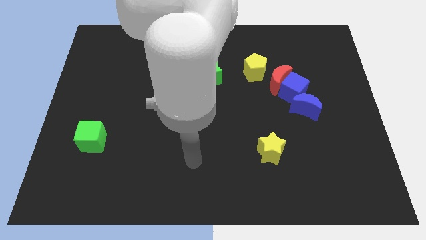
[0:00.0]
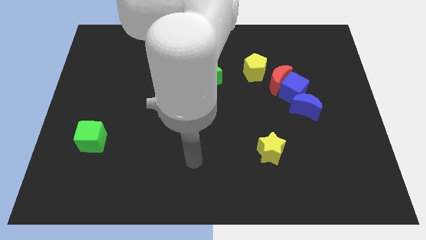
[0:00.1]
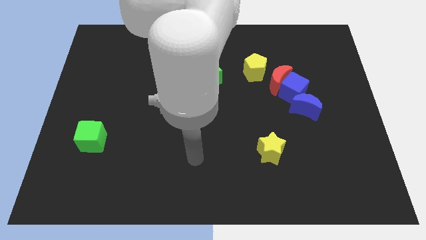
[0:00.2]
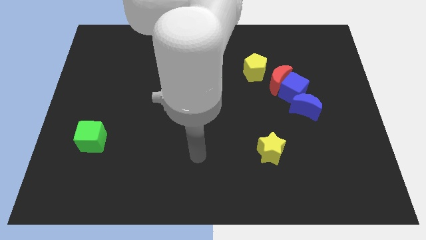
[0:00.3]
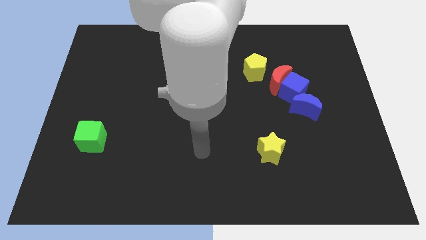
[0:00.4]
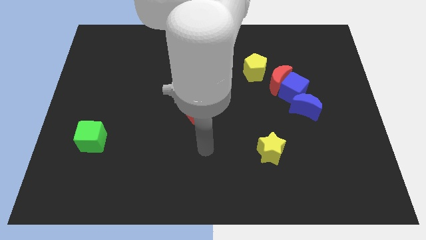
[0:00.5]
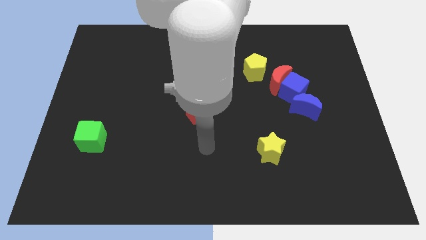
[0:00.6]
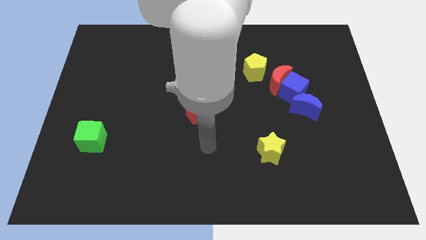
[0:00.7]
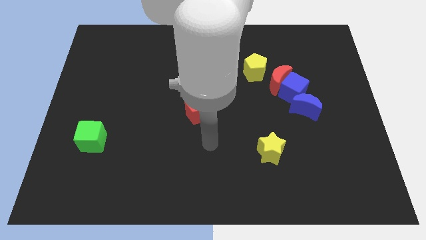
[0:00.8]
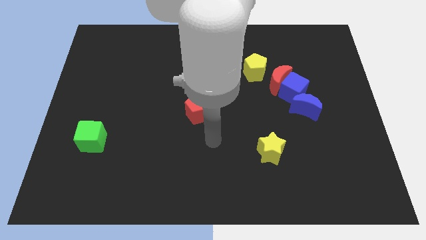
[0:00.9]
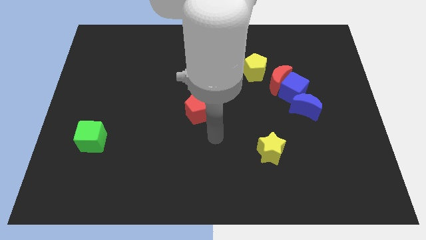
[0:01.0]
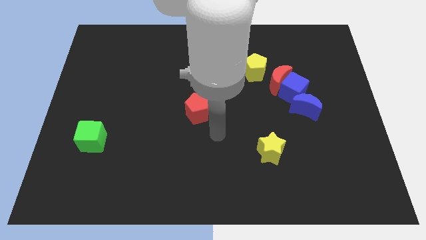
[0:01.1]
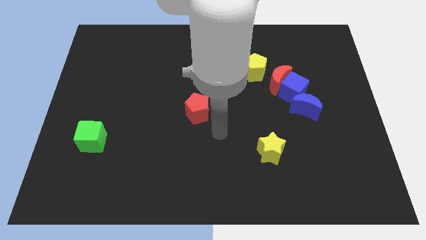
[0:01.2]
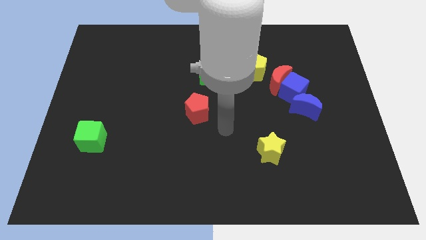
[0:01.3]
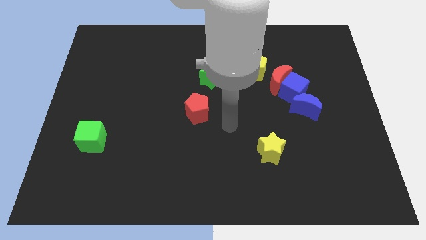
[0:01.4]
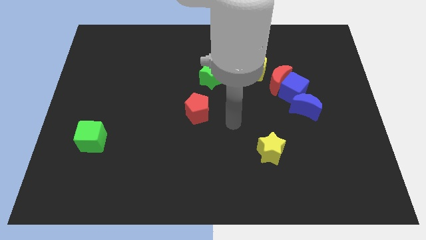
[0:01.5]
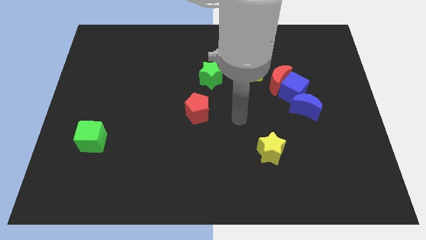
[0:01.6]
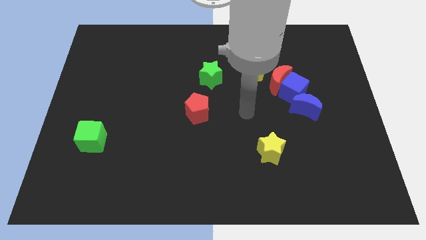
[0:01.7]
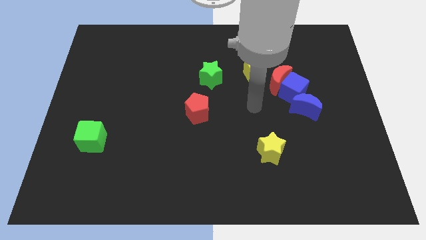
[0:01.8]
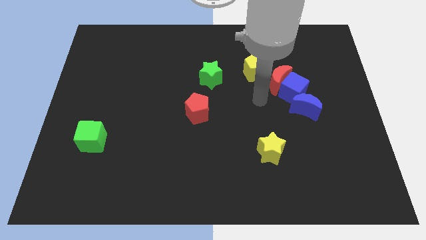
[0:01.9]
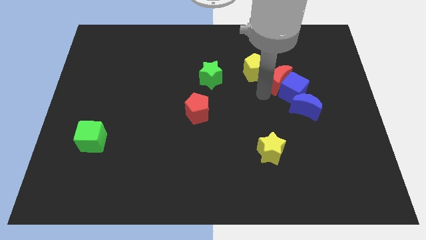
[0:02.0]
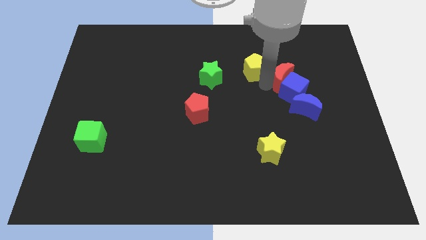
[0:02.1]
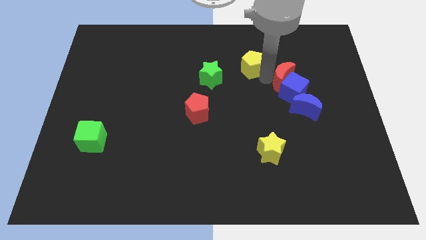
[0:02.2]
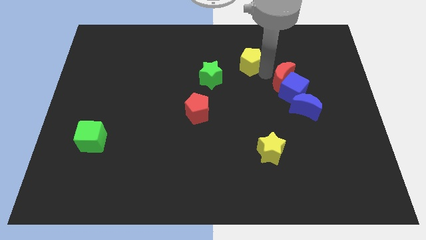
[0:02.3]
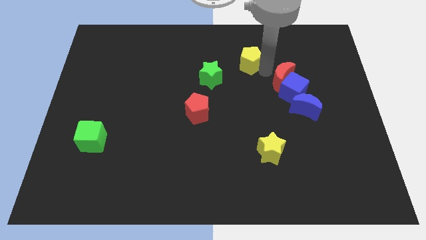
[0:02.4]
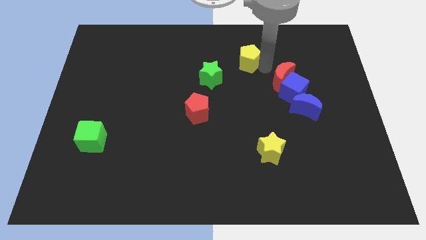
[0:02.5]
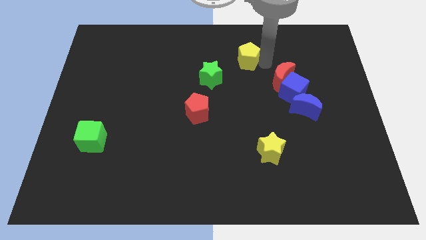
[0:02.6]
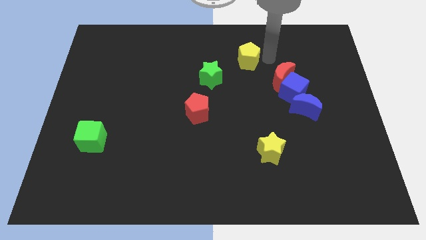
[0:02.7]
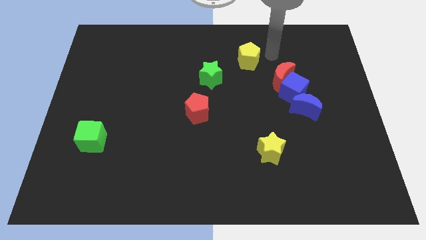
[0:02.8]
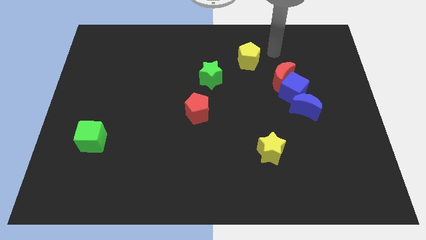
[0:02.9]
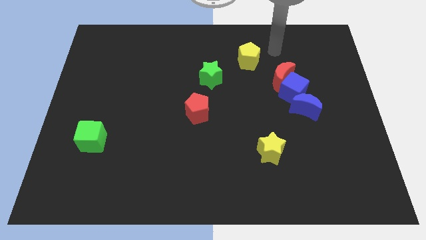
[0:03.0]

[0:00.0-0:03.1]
move your arm to the top right of the yellow pentagon

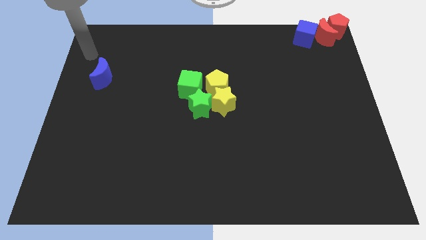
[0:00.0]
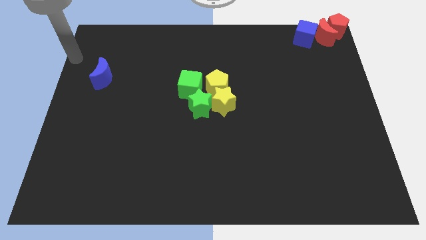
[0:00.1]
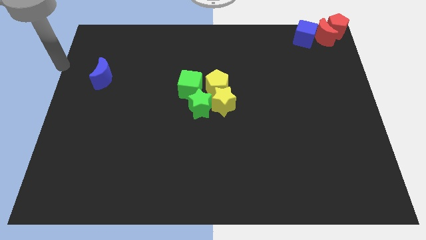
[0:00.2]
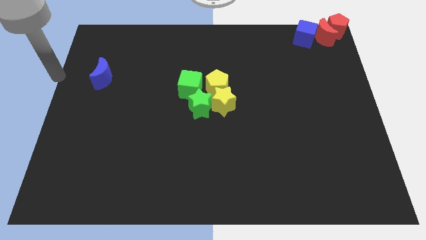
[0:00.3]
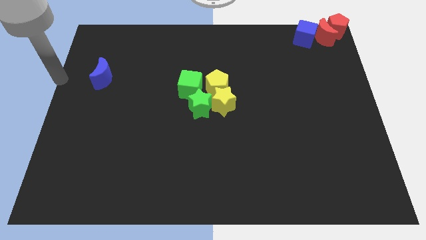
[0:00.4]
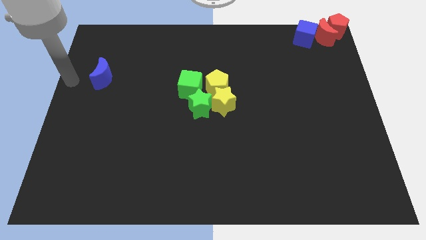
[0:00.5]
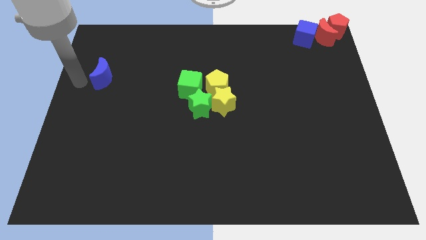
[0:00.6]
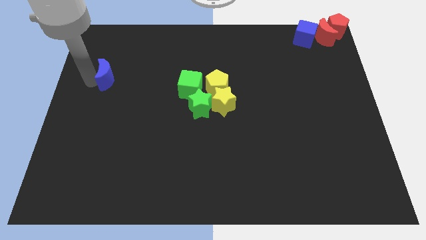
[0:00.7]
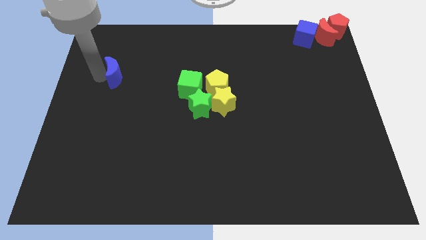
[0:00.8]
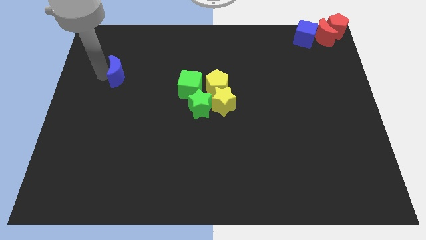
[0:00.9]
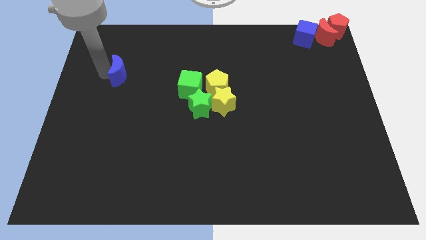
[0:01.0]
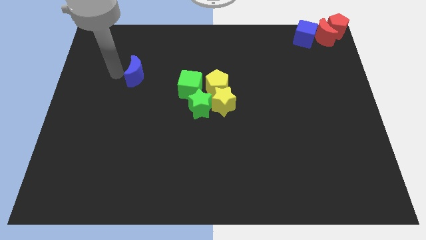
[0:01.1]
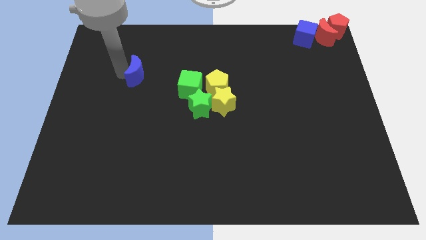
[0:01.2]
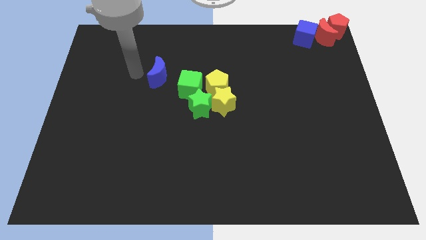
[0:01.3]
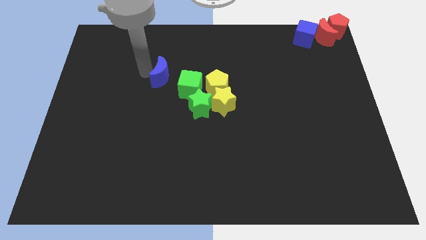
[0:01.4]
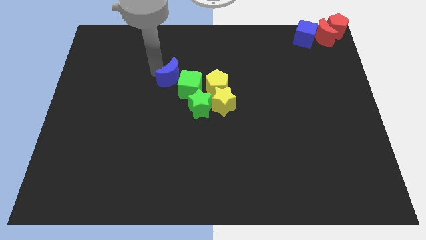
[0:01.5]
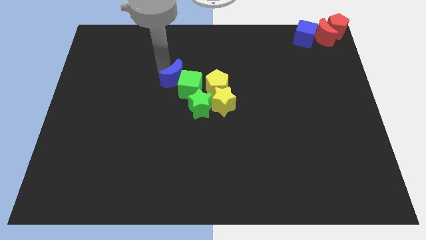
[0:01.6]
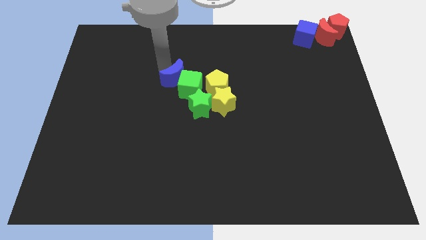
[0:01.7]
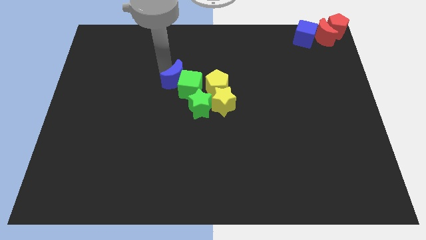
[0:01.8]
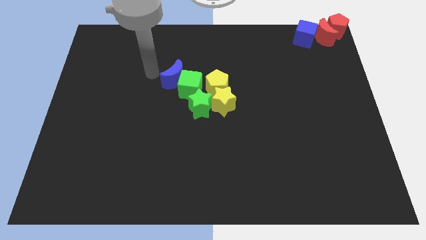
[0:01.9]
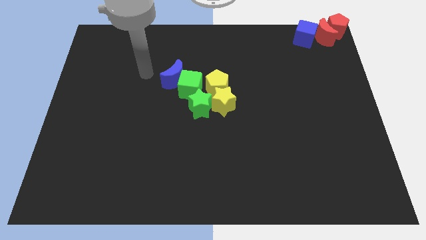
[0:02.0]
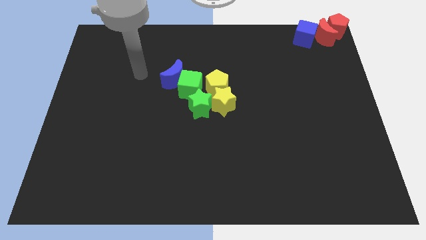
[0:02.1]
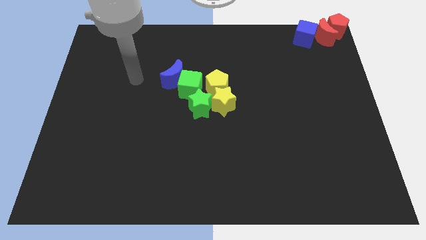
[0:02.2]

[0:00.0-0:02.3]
move the blue crescent to the top of the green cube

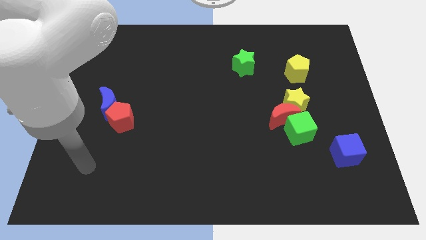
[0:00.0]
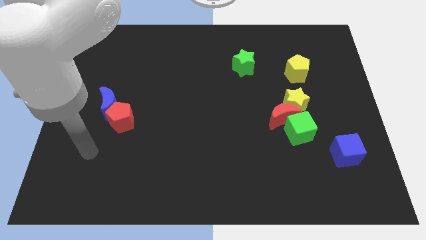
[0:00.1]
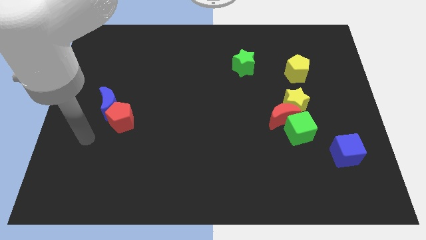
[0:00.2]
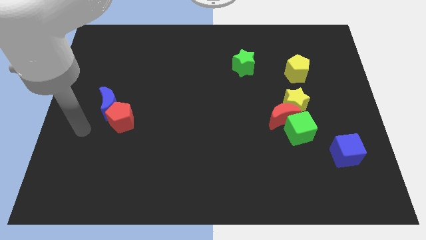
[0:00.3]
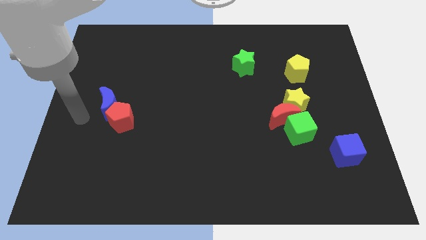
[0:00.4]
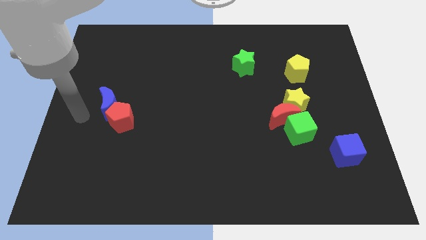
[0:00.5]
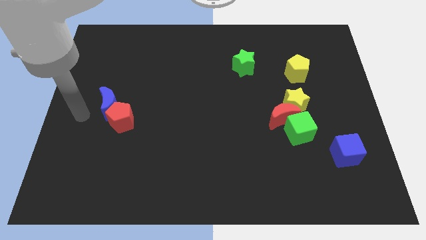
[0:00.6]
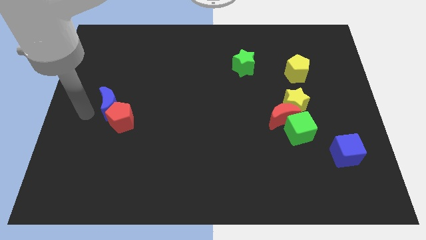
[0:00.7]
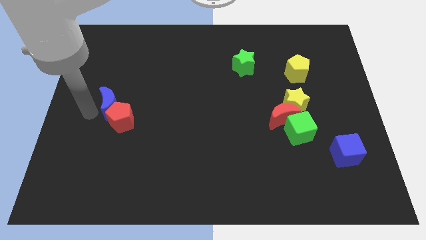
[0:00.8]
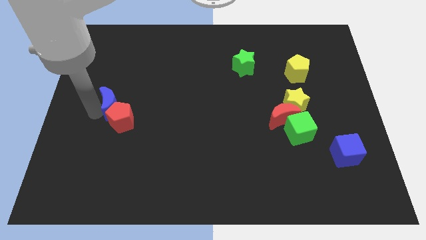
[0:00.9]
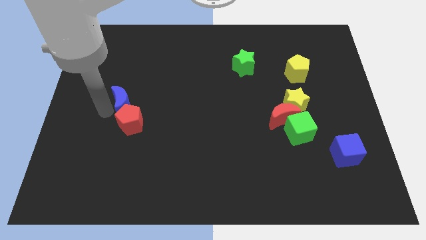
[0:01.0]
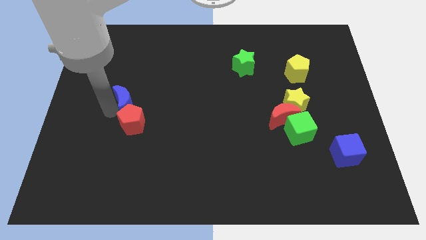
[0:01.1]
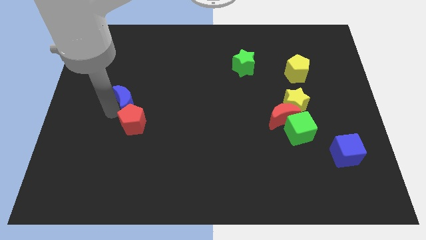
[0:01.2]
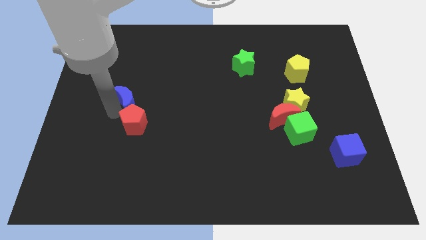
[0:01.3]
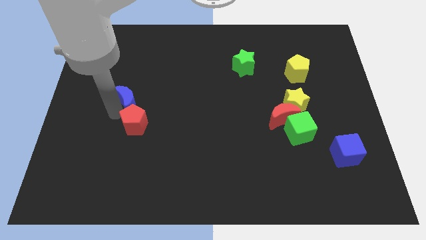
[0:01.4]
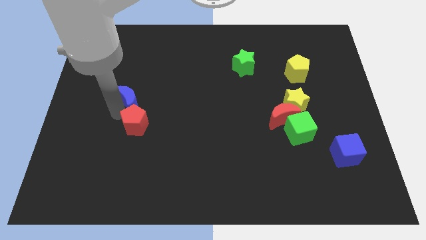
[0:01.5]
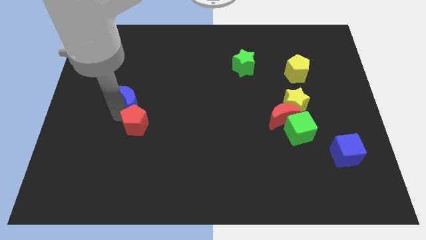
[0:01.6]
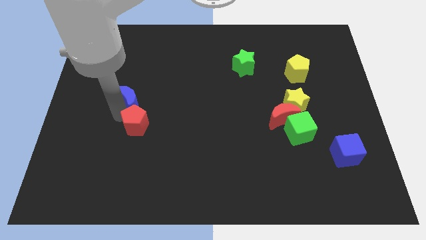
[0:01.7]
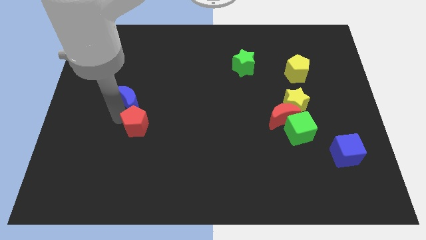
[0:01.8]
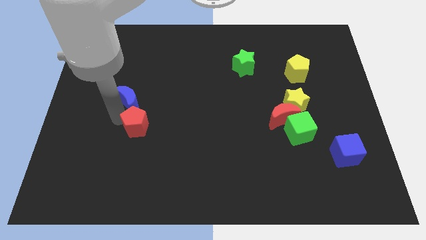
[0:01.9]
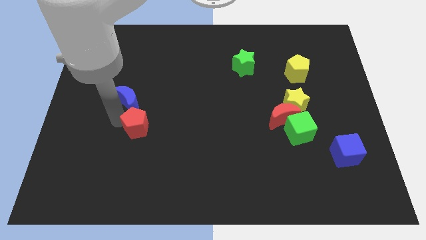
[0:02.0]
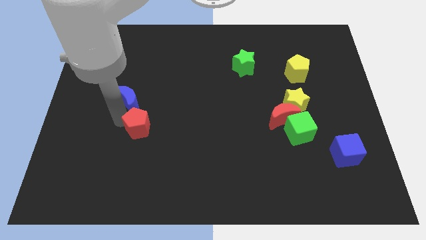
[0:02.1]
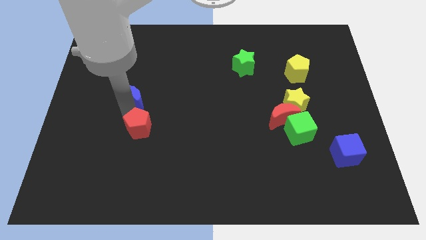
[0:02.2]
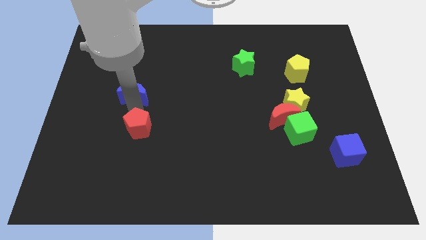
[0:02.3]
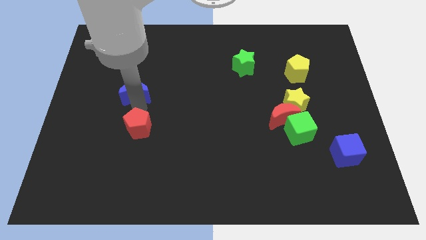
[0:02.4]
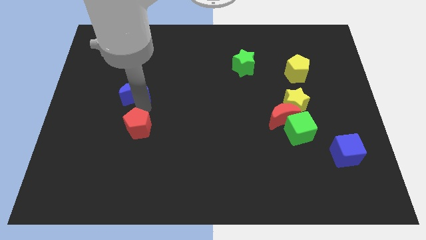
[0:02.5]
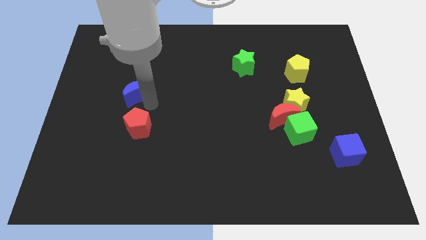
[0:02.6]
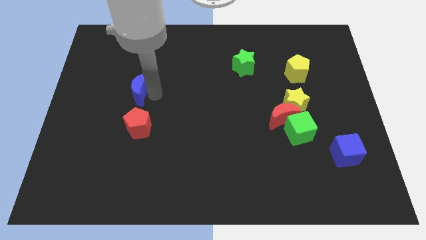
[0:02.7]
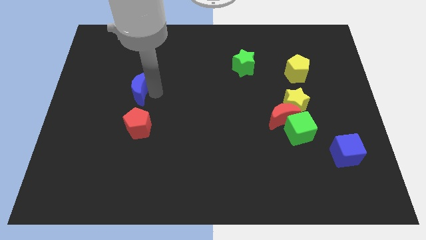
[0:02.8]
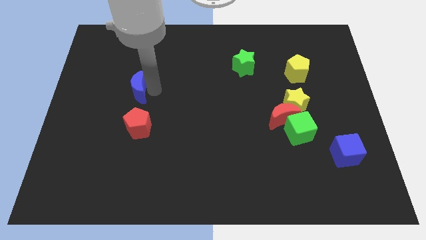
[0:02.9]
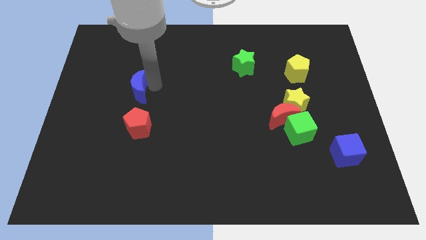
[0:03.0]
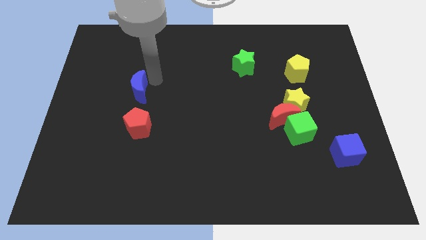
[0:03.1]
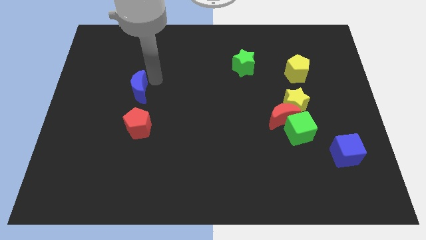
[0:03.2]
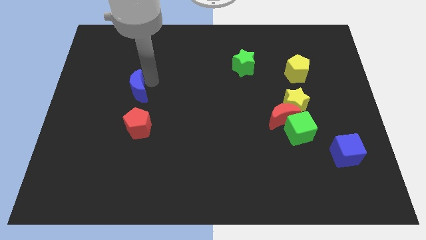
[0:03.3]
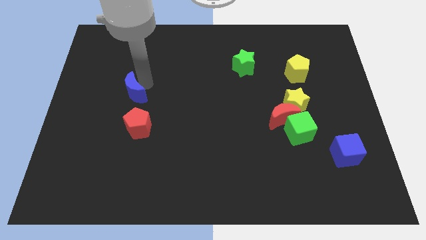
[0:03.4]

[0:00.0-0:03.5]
separate blue crescent with red pentagon
